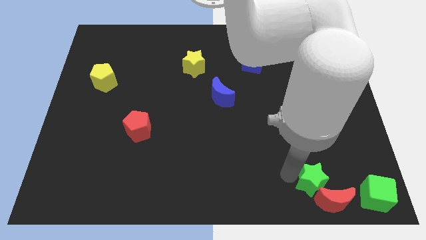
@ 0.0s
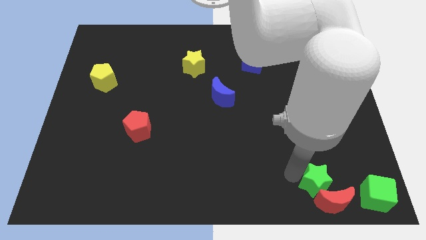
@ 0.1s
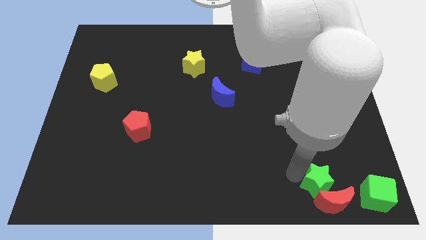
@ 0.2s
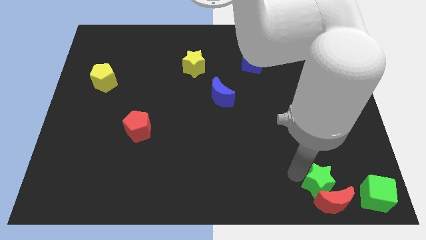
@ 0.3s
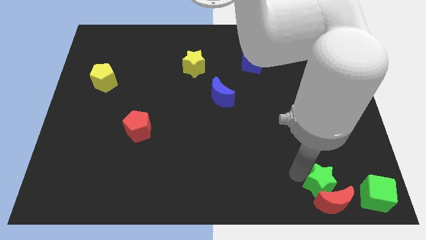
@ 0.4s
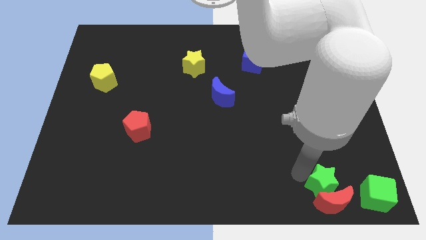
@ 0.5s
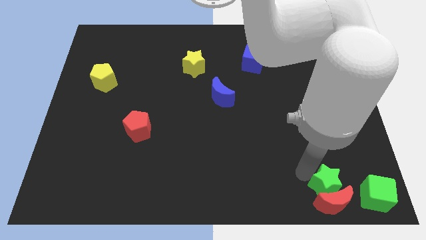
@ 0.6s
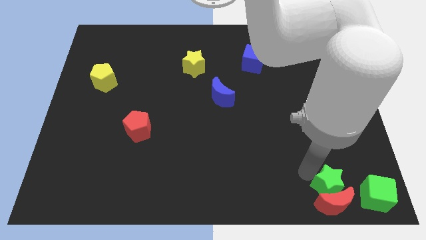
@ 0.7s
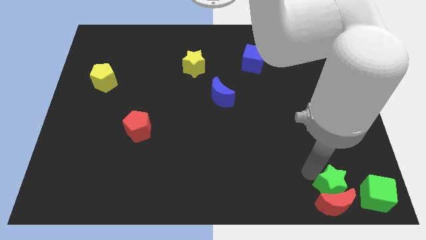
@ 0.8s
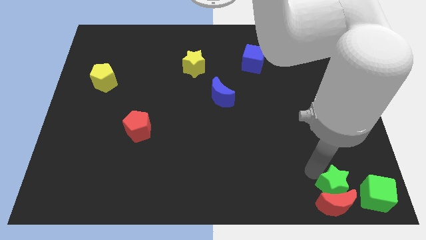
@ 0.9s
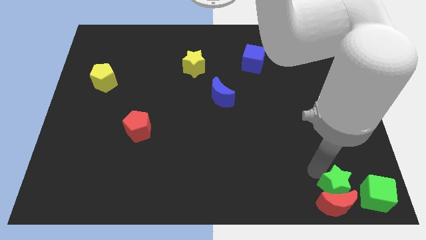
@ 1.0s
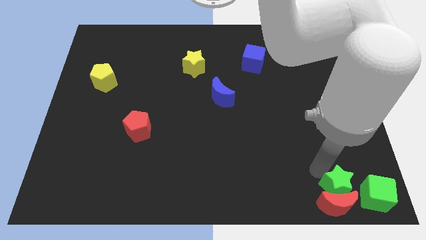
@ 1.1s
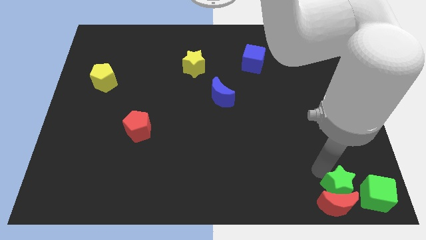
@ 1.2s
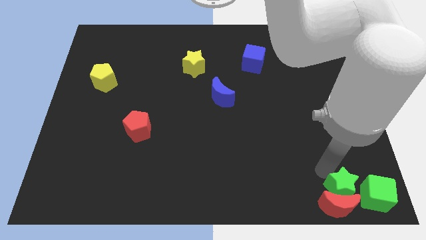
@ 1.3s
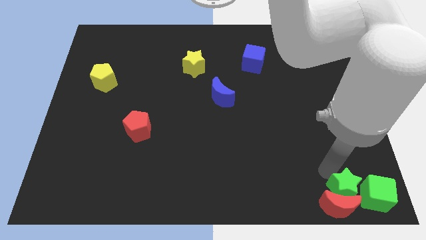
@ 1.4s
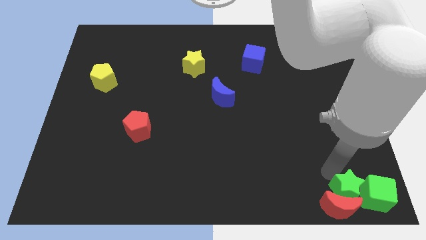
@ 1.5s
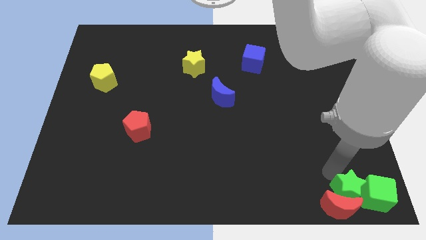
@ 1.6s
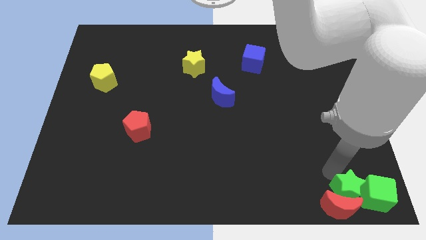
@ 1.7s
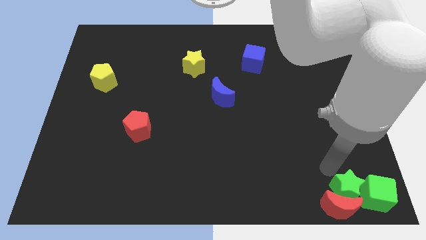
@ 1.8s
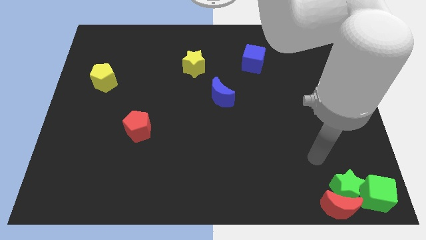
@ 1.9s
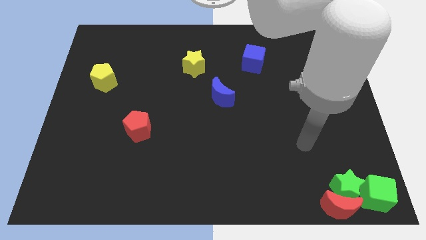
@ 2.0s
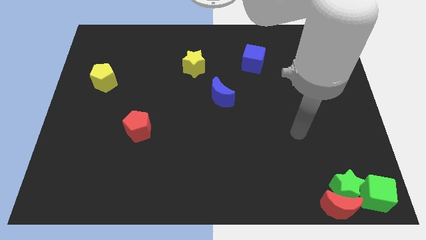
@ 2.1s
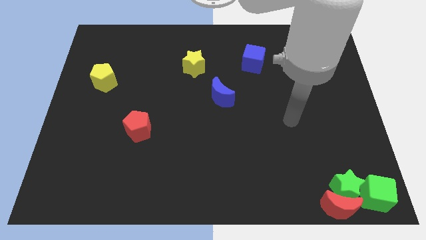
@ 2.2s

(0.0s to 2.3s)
place the green star above to the red moon

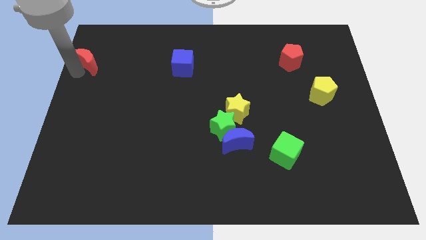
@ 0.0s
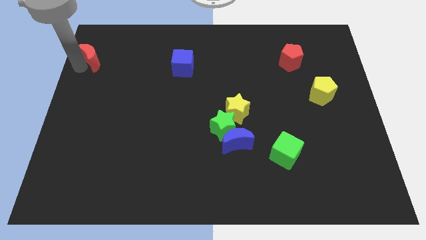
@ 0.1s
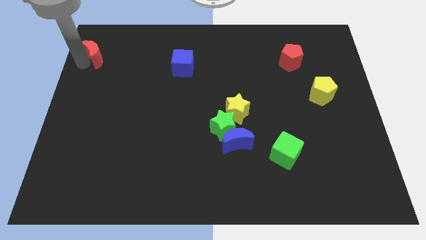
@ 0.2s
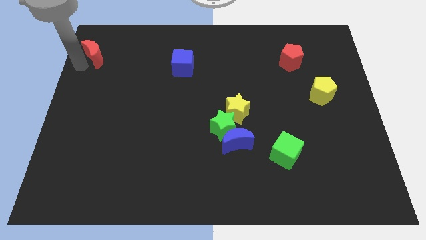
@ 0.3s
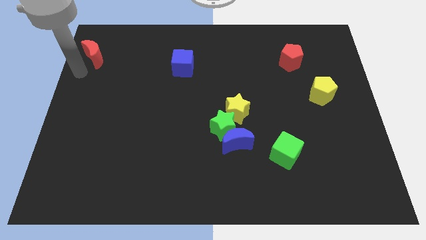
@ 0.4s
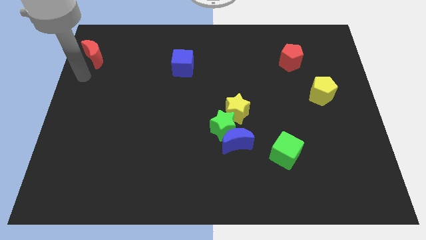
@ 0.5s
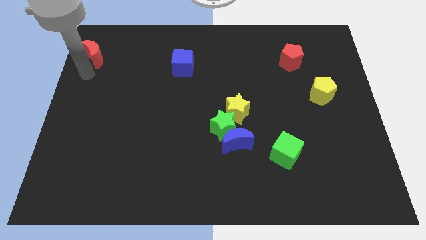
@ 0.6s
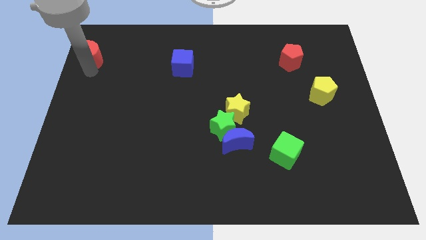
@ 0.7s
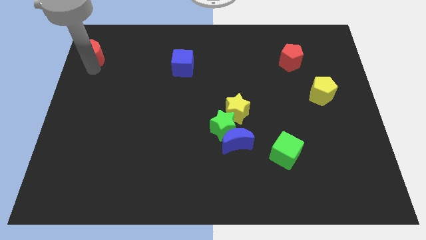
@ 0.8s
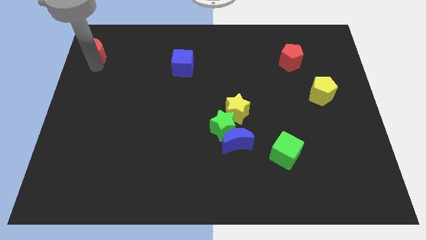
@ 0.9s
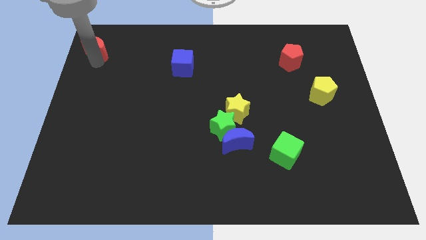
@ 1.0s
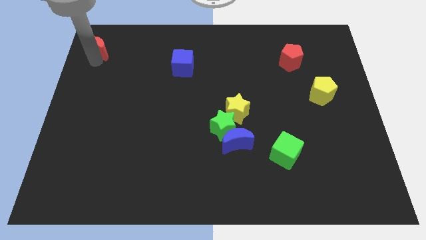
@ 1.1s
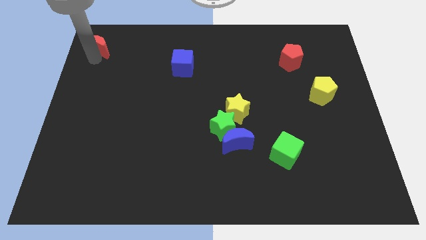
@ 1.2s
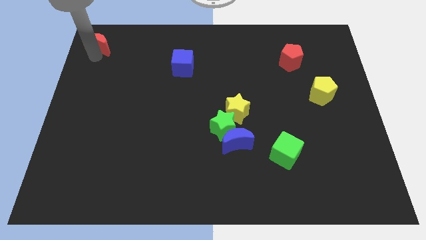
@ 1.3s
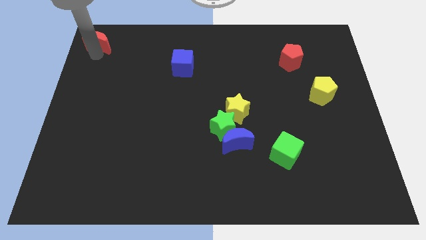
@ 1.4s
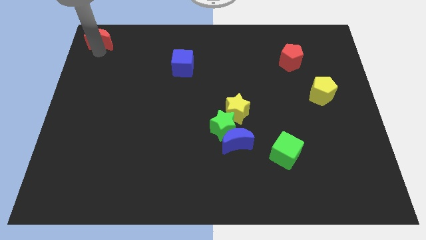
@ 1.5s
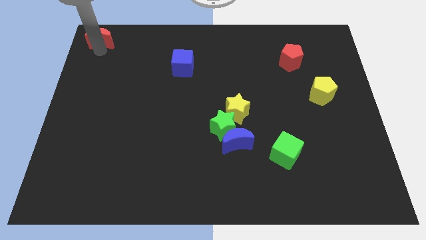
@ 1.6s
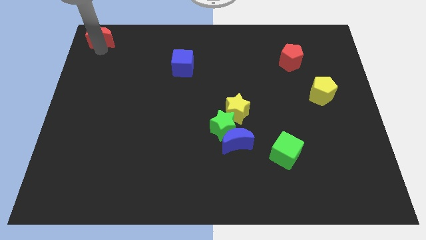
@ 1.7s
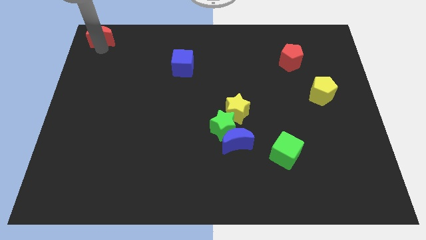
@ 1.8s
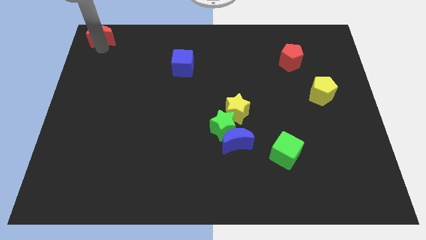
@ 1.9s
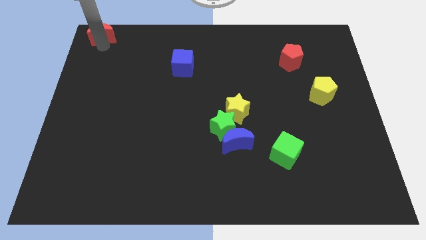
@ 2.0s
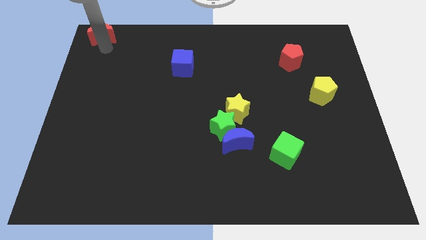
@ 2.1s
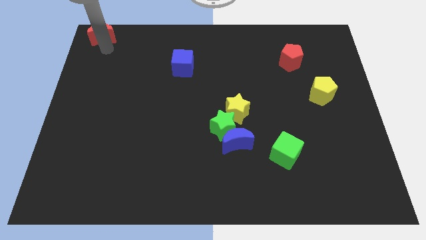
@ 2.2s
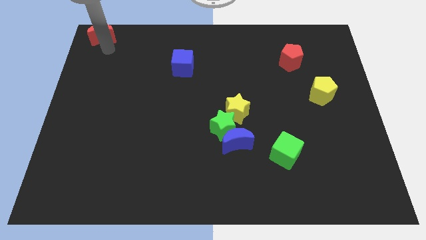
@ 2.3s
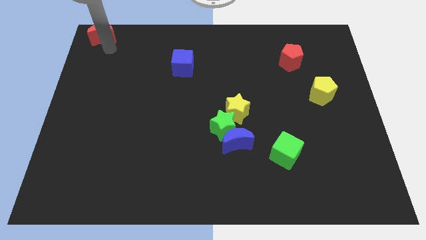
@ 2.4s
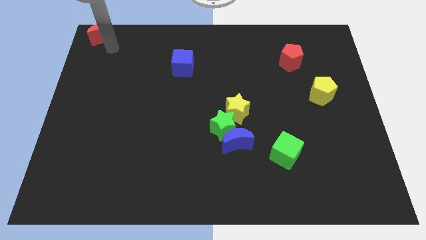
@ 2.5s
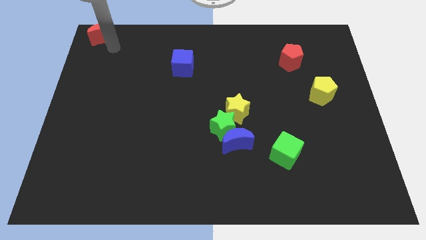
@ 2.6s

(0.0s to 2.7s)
put the red moon at the top left of the board

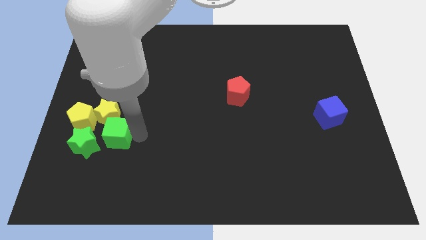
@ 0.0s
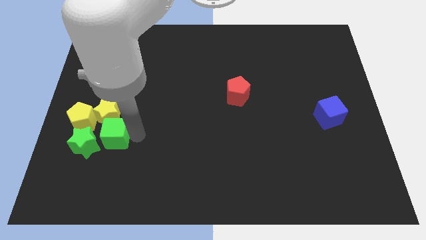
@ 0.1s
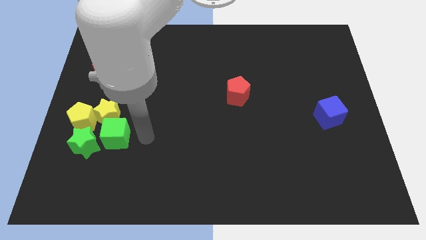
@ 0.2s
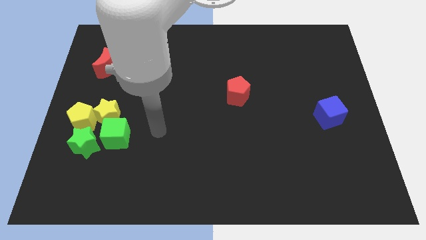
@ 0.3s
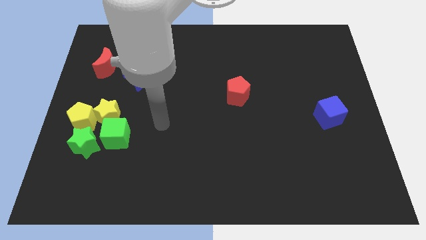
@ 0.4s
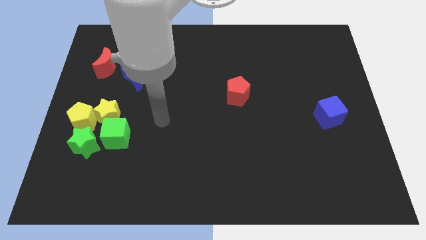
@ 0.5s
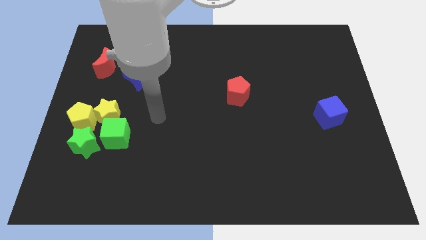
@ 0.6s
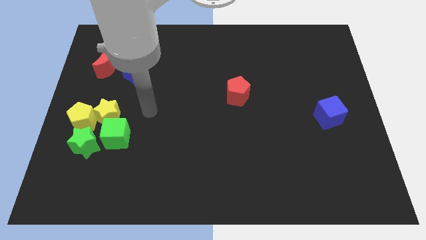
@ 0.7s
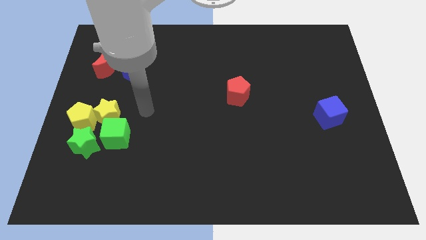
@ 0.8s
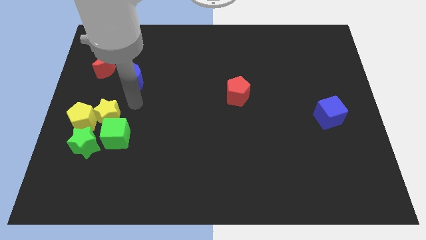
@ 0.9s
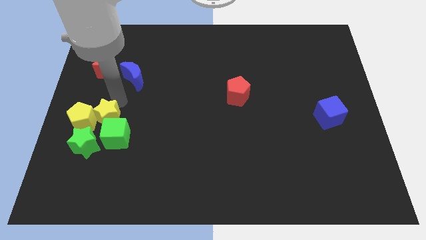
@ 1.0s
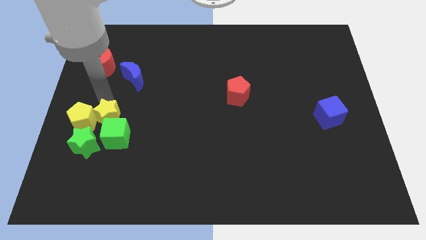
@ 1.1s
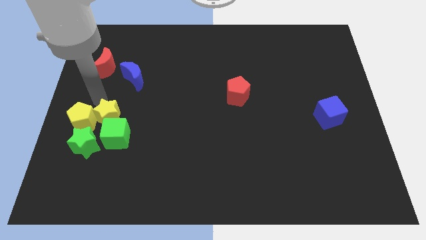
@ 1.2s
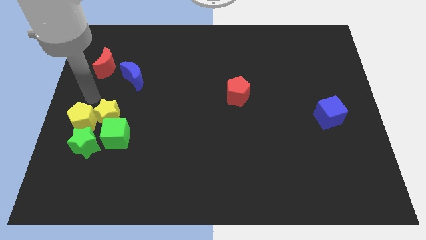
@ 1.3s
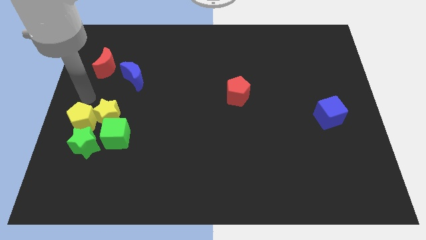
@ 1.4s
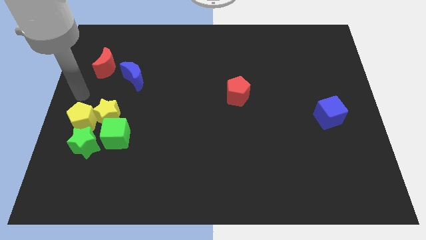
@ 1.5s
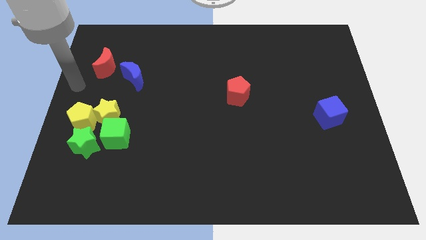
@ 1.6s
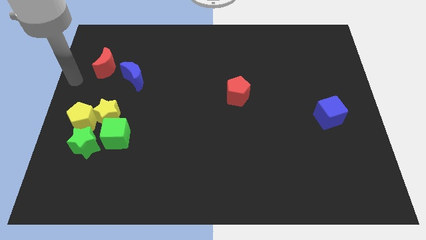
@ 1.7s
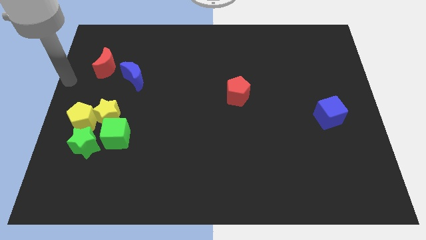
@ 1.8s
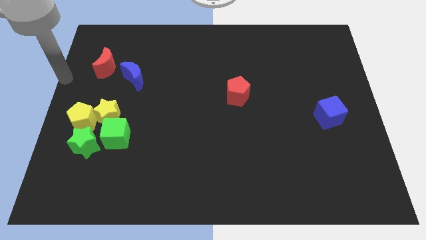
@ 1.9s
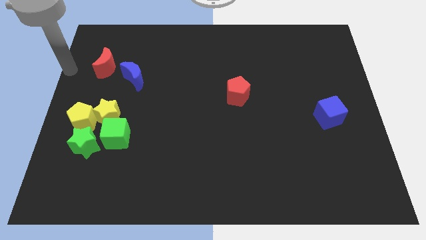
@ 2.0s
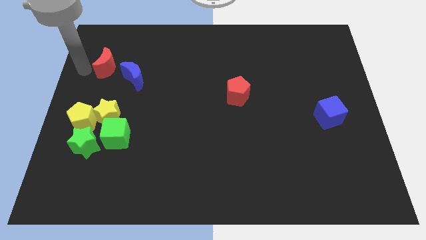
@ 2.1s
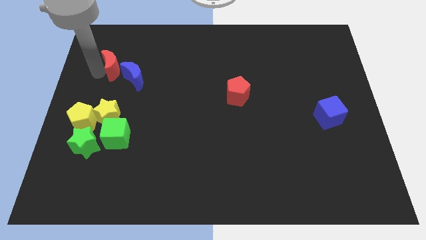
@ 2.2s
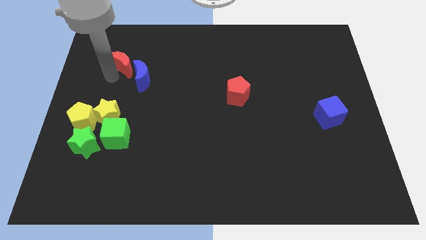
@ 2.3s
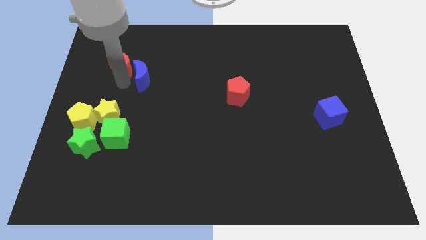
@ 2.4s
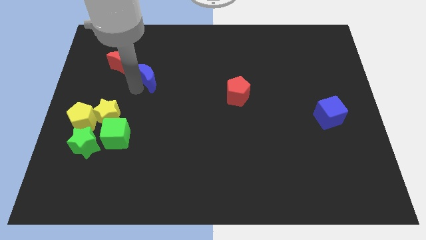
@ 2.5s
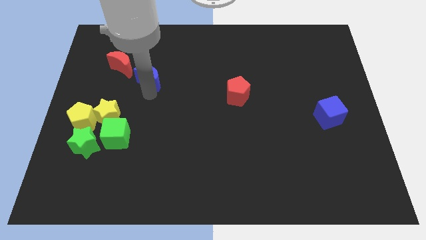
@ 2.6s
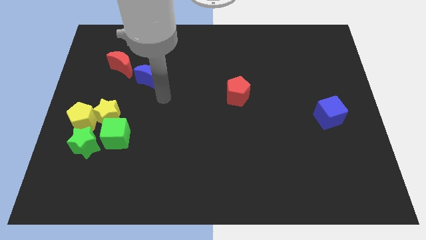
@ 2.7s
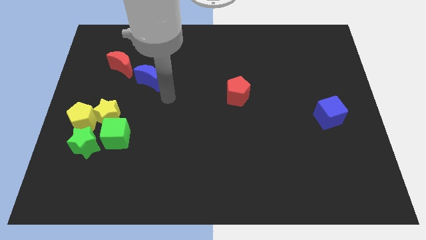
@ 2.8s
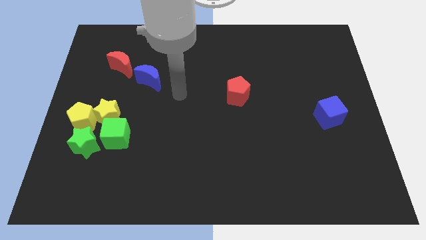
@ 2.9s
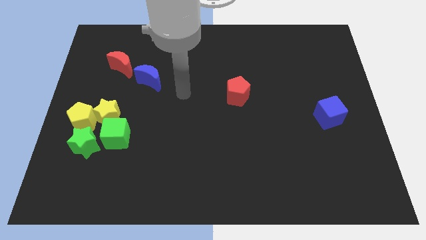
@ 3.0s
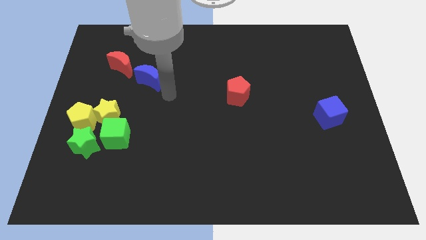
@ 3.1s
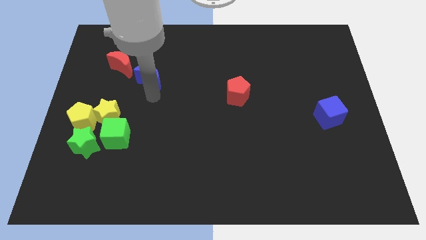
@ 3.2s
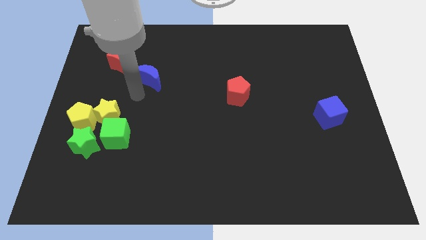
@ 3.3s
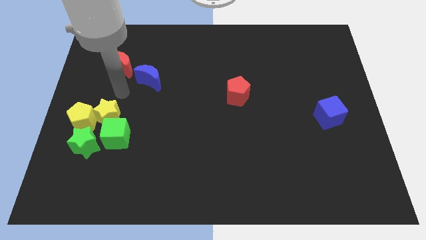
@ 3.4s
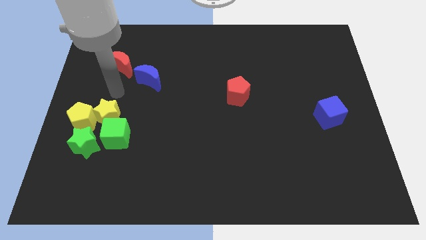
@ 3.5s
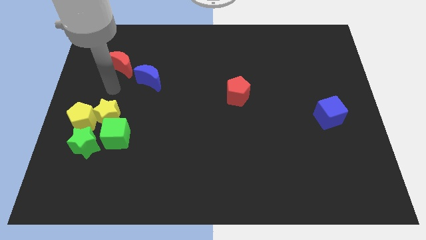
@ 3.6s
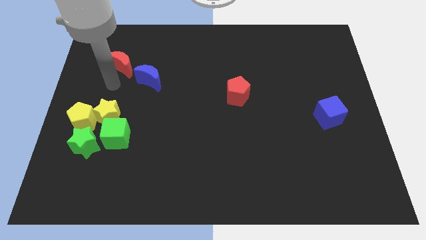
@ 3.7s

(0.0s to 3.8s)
rotate the red and blue crescent diagonal to each other
